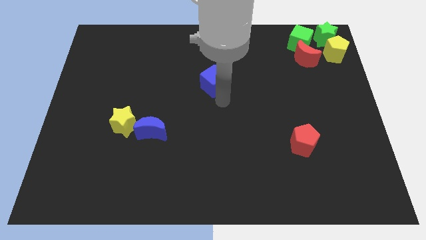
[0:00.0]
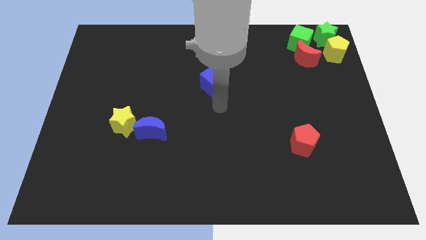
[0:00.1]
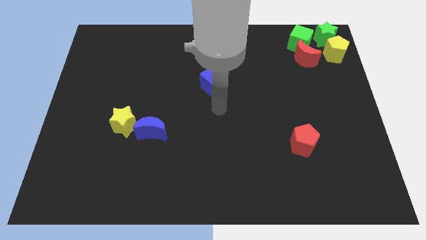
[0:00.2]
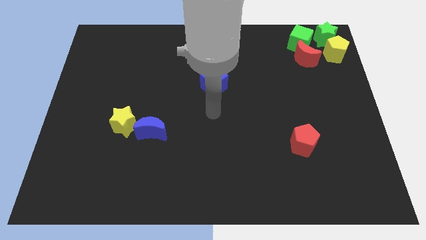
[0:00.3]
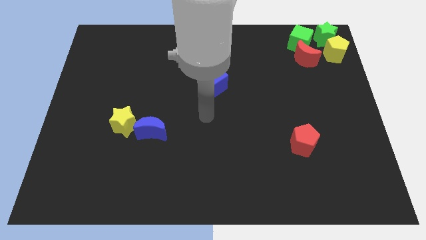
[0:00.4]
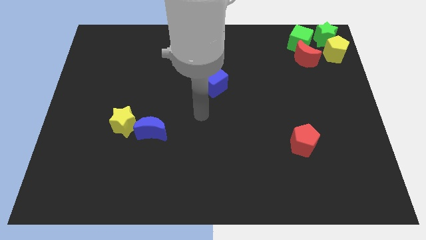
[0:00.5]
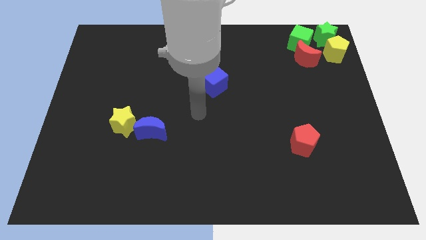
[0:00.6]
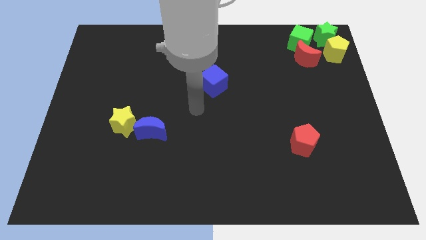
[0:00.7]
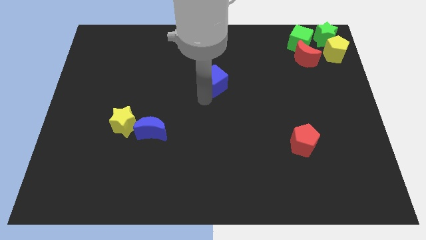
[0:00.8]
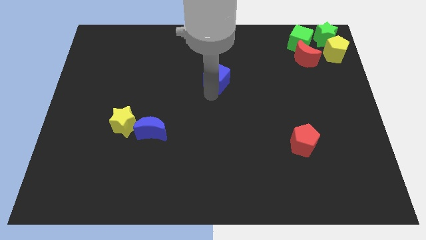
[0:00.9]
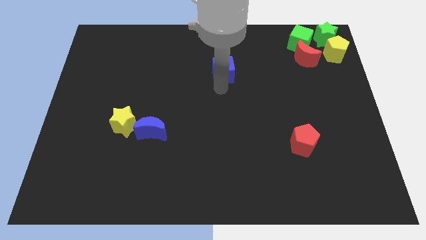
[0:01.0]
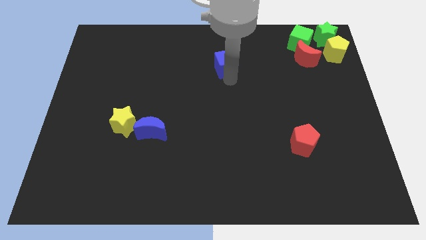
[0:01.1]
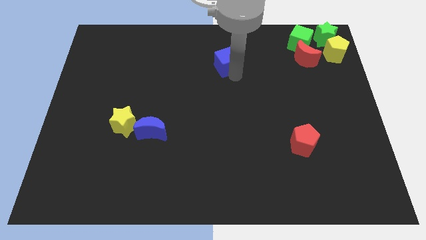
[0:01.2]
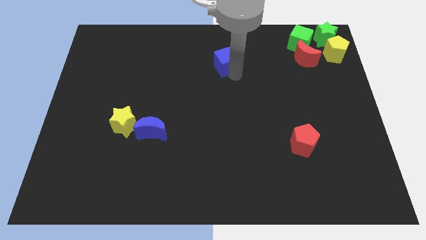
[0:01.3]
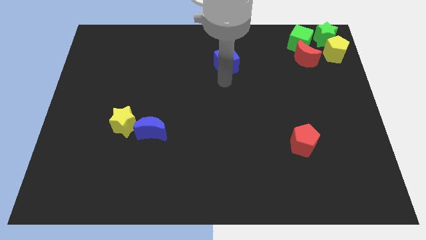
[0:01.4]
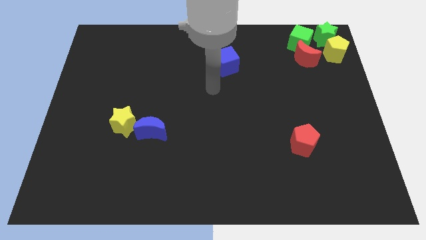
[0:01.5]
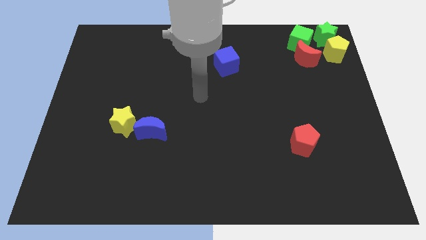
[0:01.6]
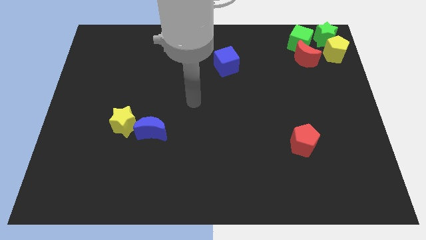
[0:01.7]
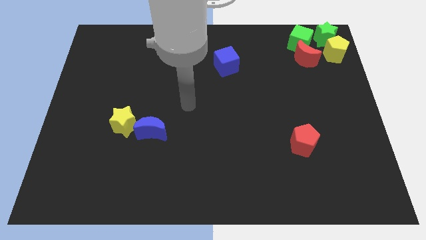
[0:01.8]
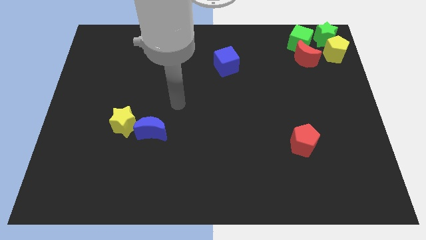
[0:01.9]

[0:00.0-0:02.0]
slightly push the blue cube towards the top of the board

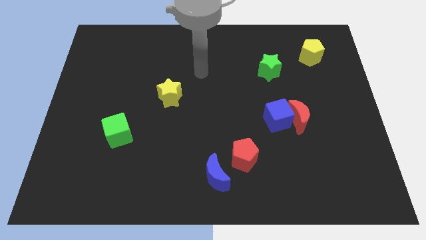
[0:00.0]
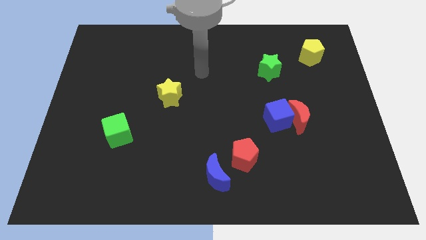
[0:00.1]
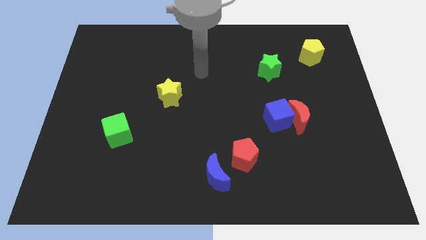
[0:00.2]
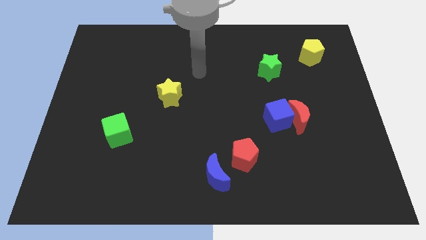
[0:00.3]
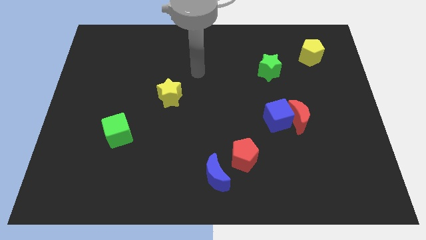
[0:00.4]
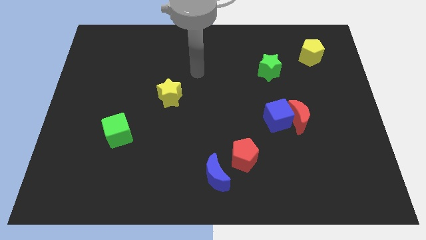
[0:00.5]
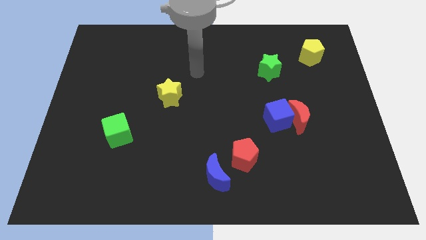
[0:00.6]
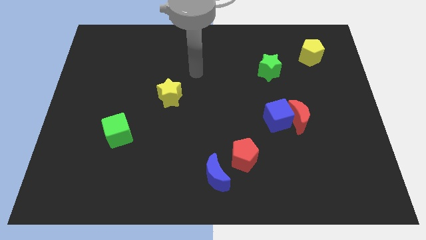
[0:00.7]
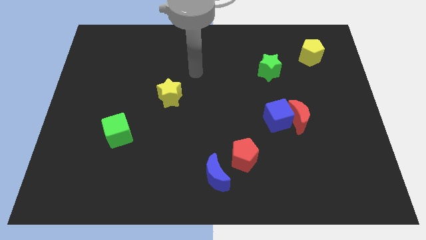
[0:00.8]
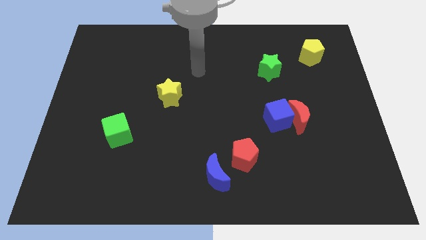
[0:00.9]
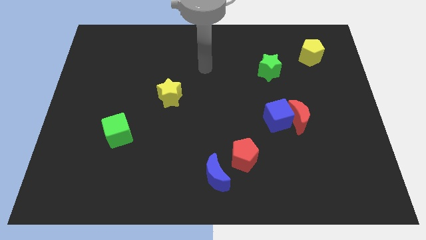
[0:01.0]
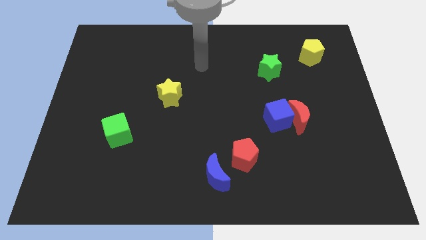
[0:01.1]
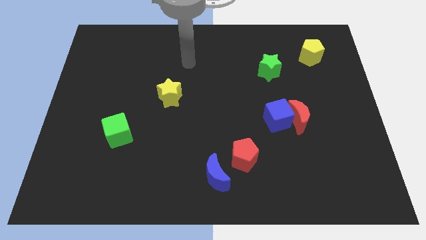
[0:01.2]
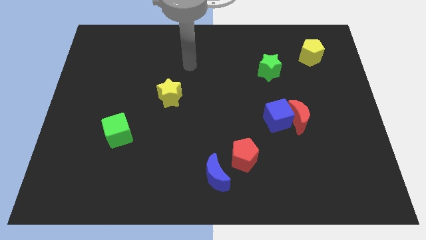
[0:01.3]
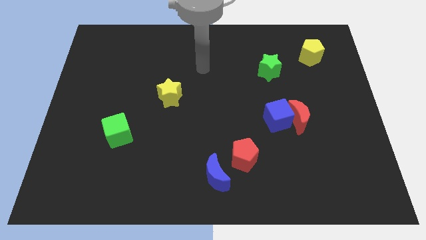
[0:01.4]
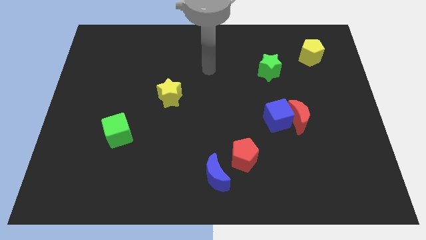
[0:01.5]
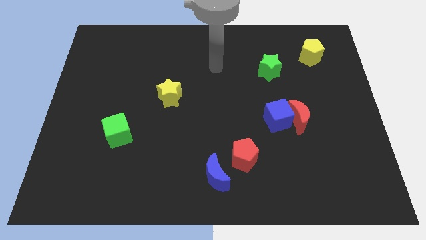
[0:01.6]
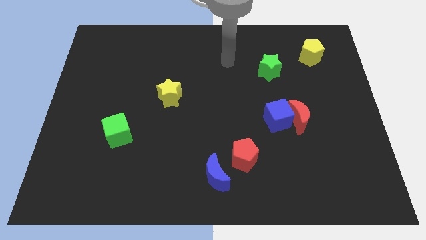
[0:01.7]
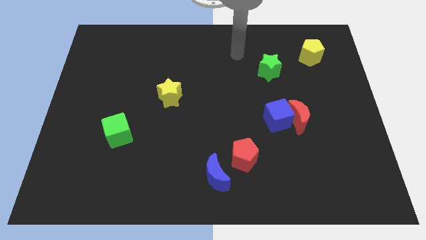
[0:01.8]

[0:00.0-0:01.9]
move the arm towards the center of the board

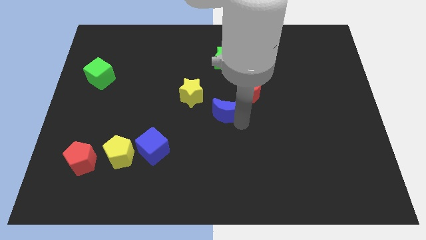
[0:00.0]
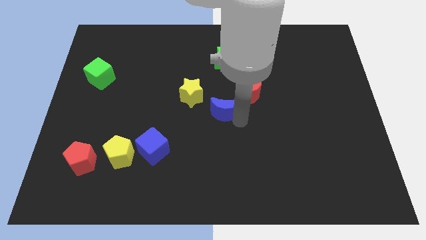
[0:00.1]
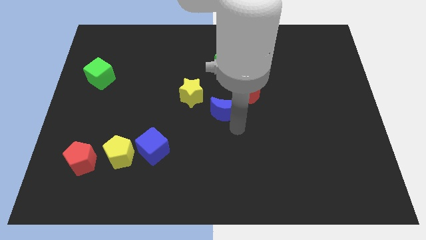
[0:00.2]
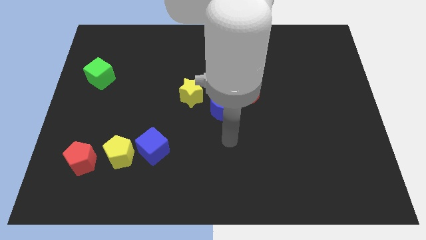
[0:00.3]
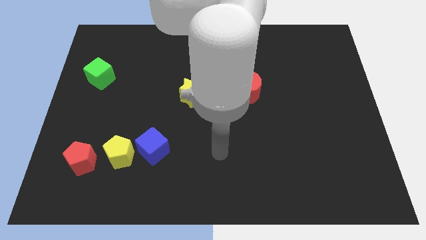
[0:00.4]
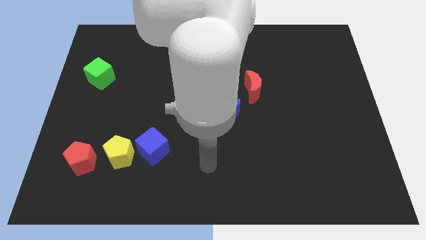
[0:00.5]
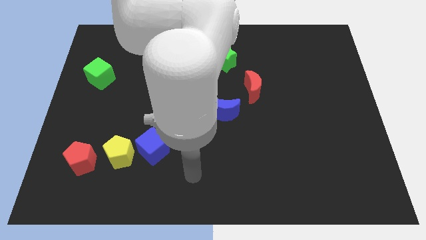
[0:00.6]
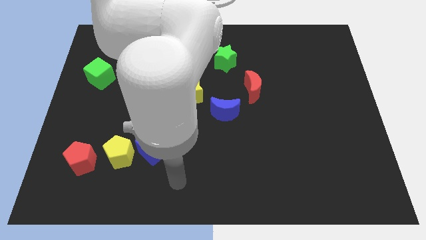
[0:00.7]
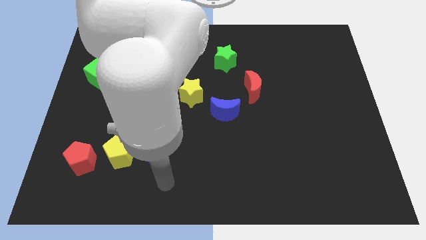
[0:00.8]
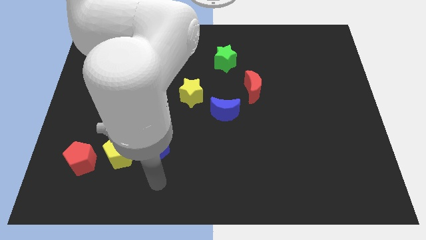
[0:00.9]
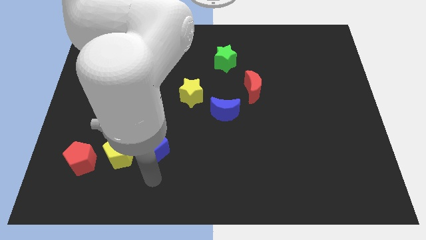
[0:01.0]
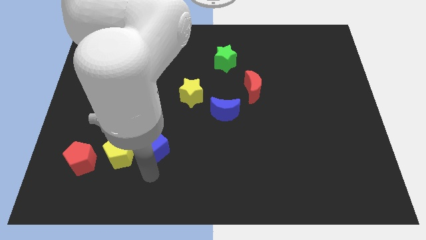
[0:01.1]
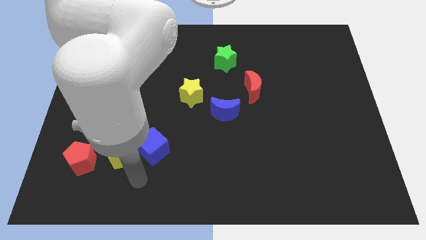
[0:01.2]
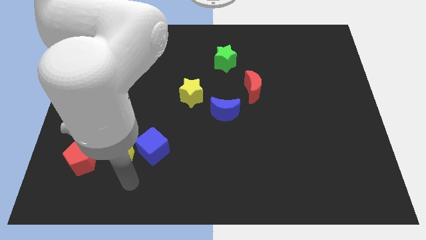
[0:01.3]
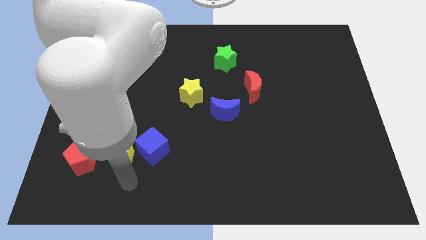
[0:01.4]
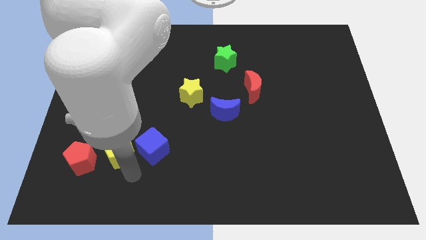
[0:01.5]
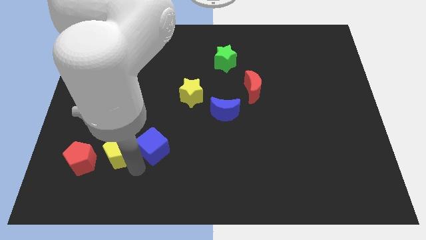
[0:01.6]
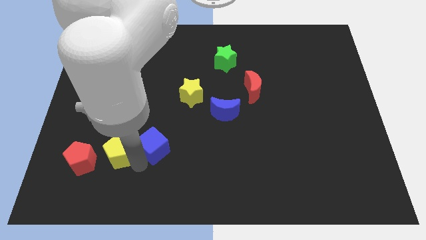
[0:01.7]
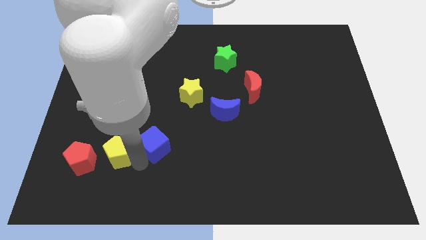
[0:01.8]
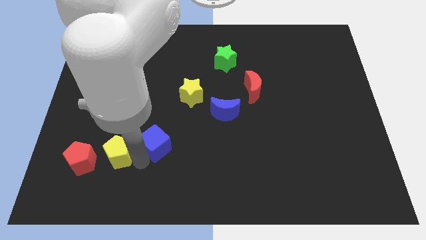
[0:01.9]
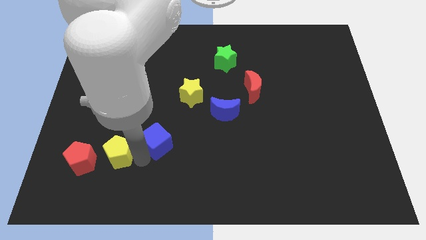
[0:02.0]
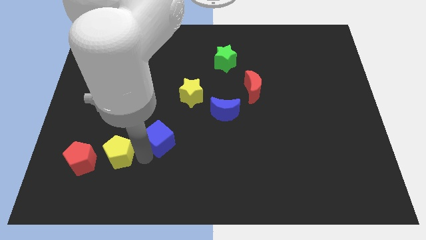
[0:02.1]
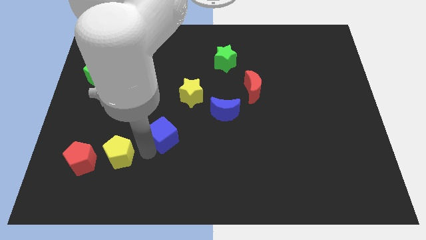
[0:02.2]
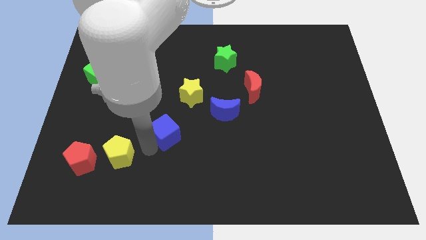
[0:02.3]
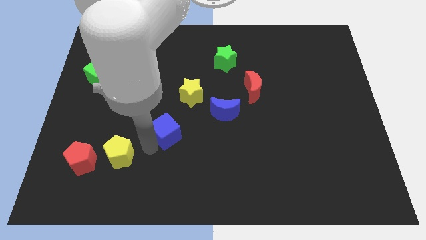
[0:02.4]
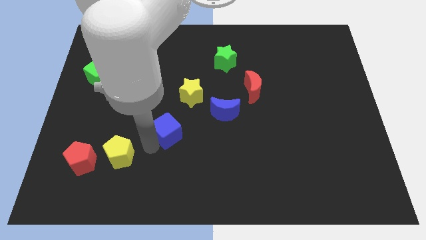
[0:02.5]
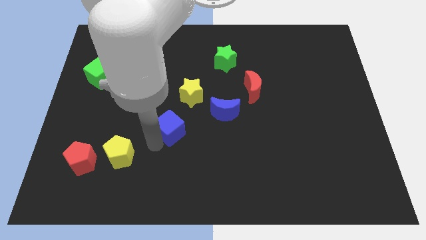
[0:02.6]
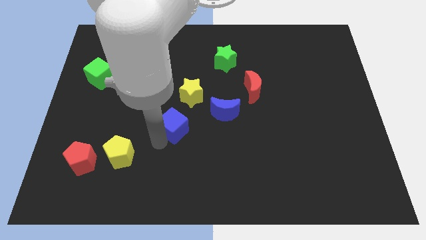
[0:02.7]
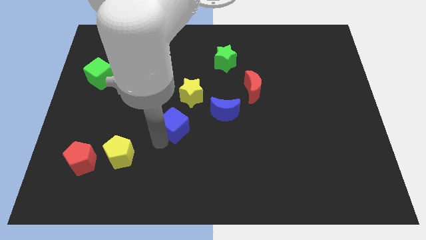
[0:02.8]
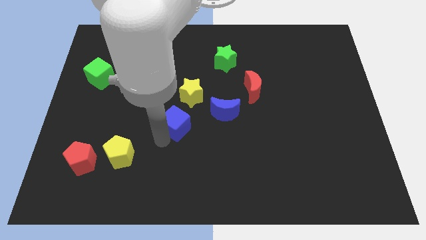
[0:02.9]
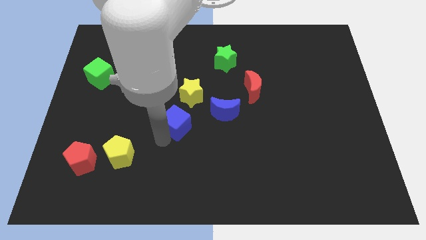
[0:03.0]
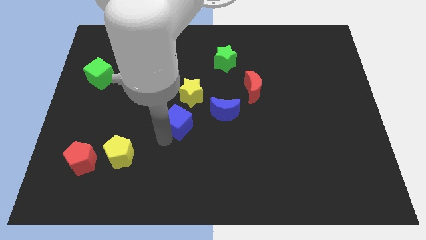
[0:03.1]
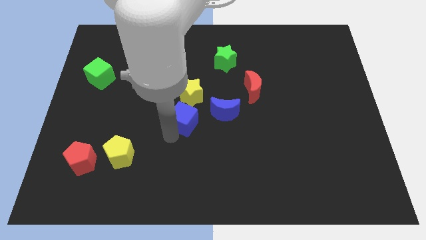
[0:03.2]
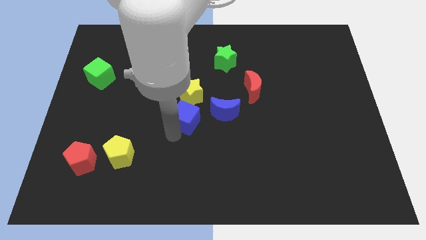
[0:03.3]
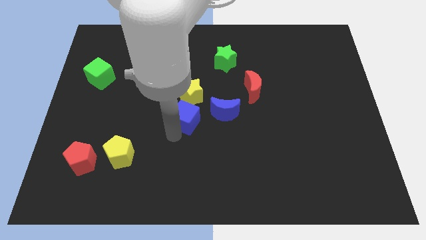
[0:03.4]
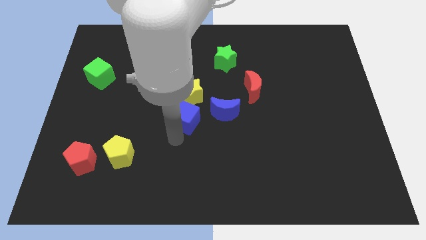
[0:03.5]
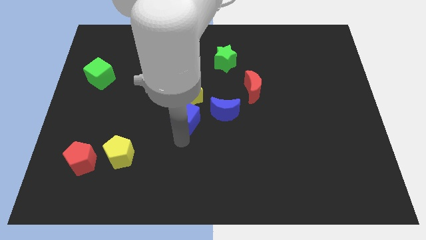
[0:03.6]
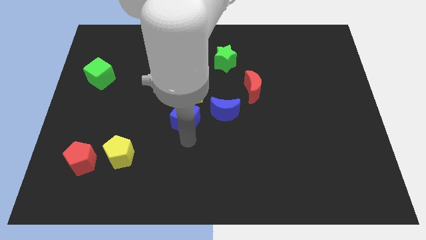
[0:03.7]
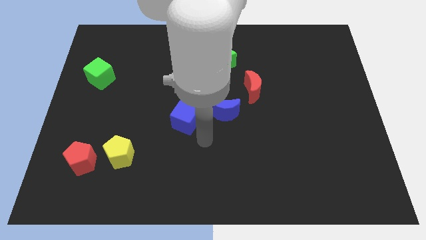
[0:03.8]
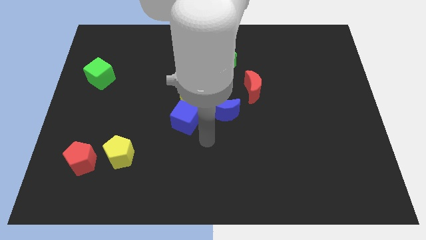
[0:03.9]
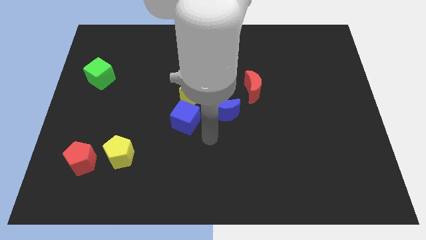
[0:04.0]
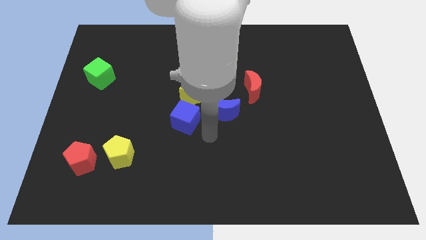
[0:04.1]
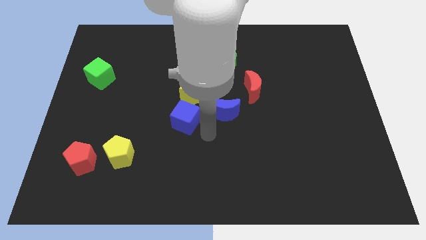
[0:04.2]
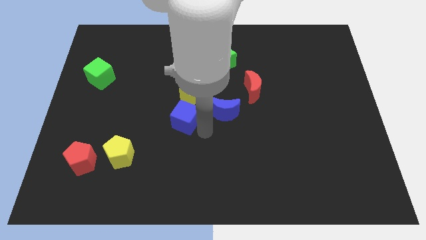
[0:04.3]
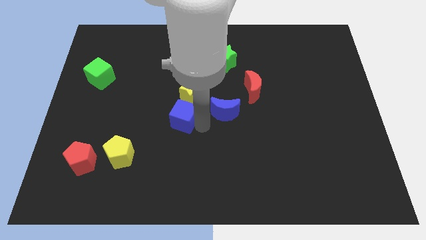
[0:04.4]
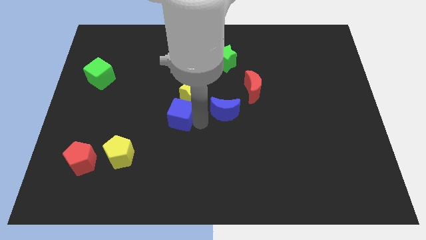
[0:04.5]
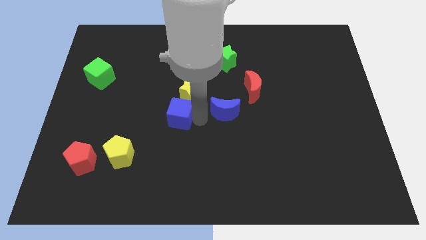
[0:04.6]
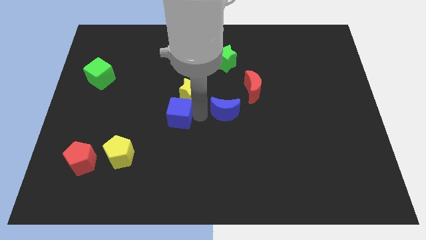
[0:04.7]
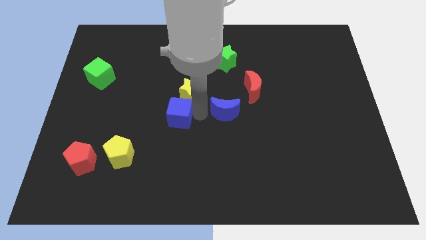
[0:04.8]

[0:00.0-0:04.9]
push the blue cube to the bottom of the yellow star

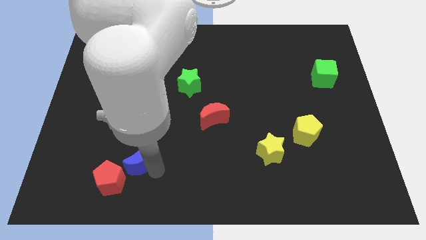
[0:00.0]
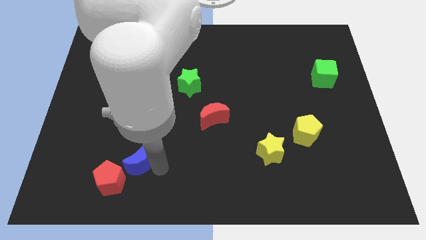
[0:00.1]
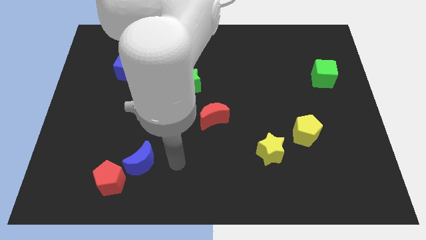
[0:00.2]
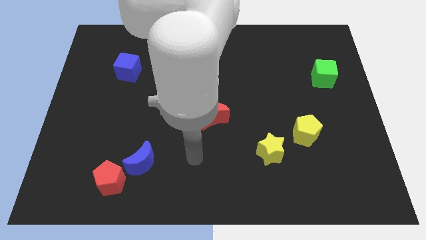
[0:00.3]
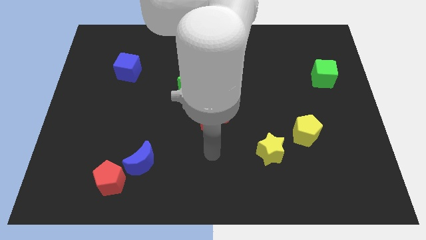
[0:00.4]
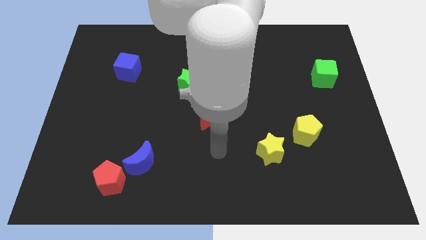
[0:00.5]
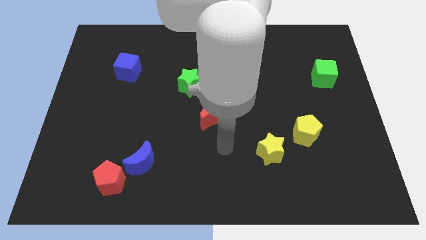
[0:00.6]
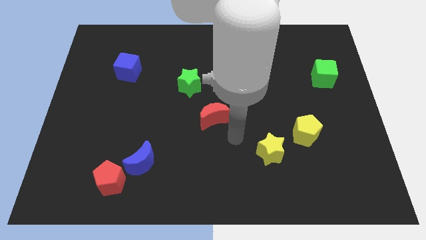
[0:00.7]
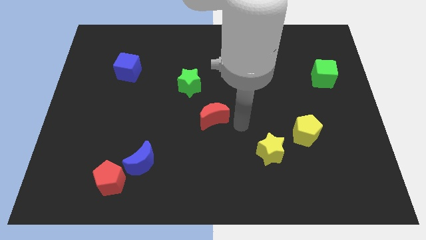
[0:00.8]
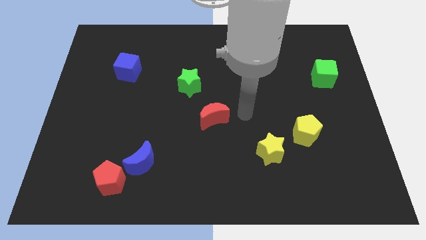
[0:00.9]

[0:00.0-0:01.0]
place the arm to the right side of the red crescent
